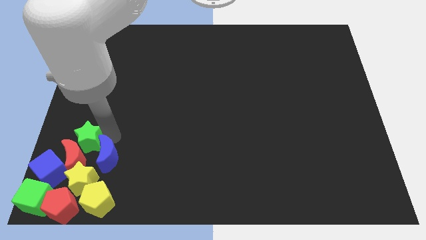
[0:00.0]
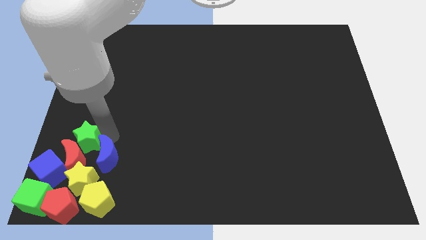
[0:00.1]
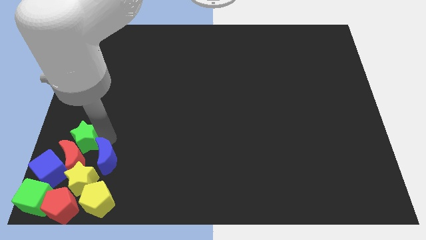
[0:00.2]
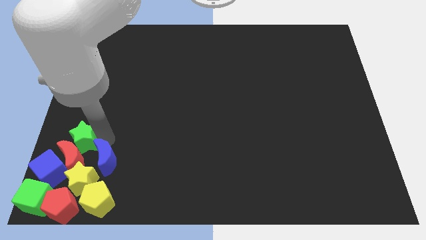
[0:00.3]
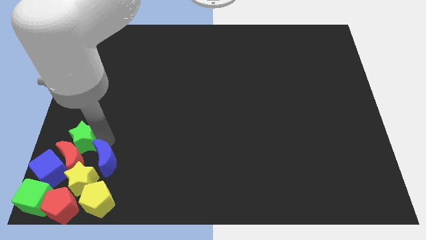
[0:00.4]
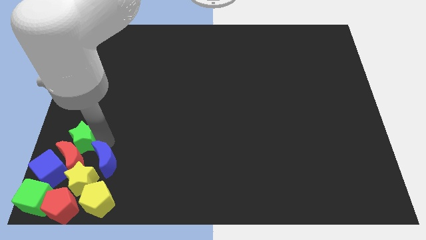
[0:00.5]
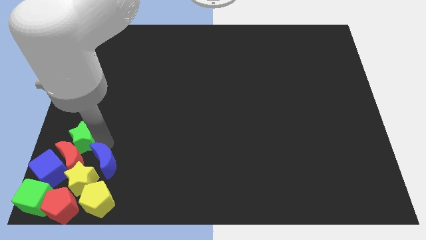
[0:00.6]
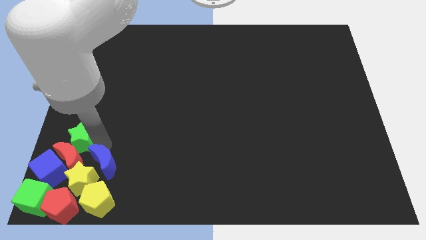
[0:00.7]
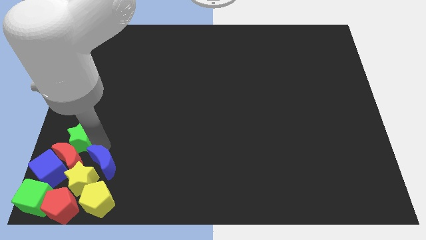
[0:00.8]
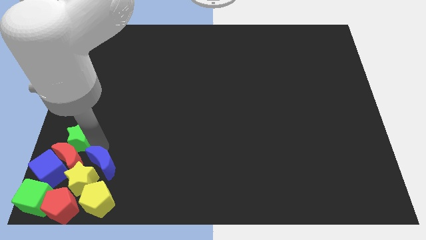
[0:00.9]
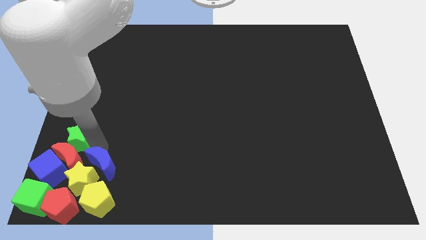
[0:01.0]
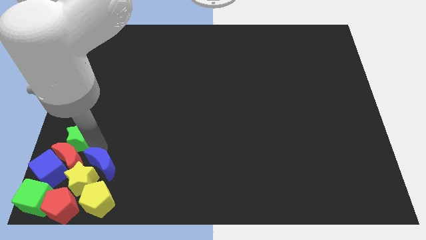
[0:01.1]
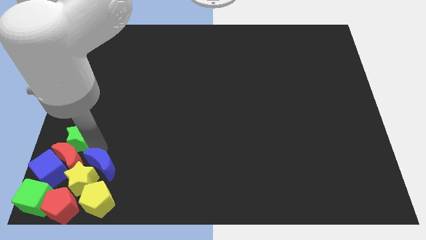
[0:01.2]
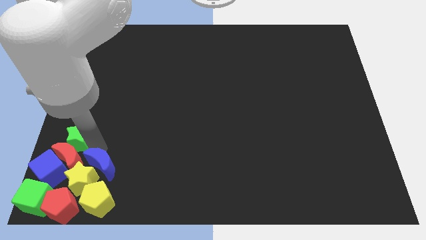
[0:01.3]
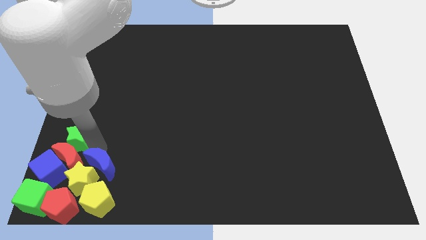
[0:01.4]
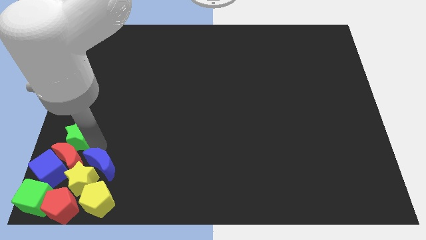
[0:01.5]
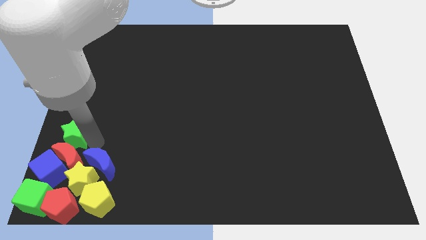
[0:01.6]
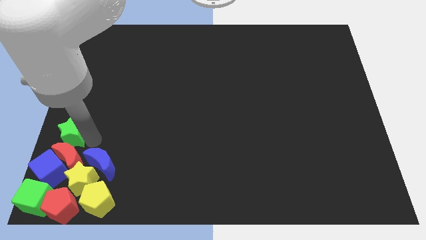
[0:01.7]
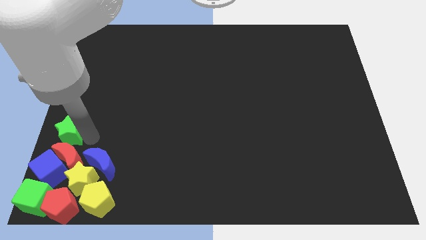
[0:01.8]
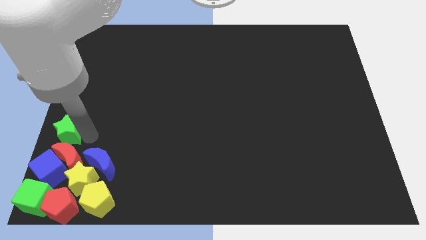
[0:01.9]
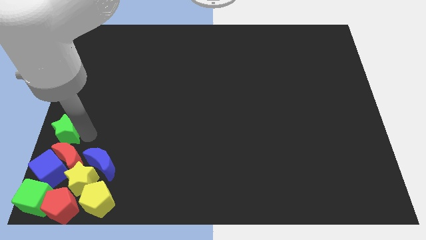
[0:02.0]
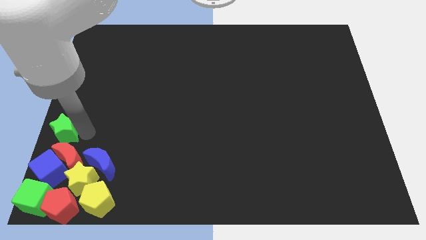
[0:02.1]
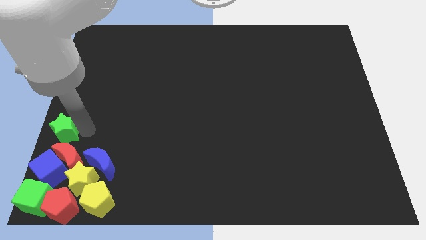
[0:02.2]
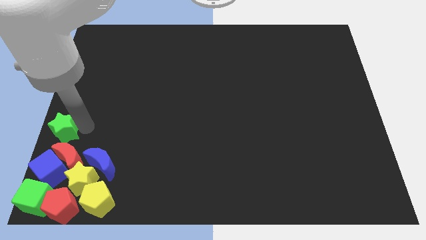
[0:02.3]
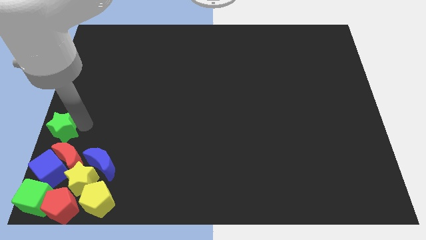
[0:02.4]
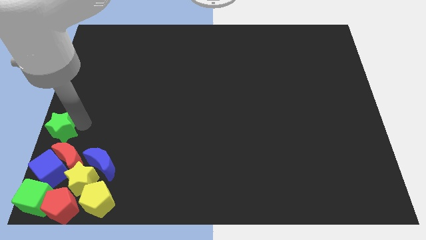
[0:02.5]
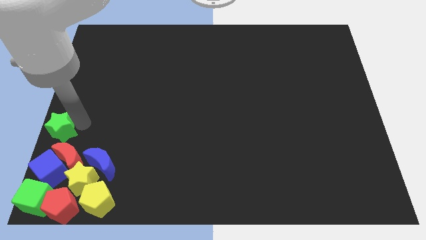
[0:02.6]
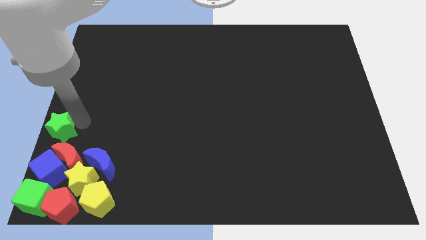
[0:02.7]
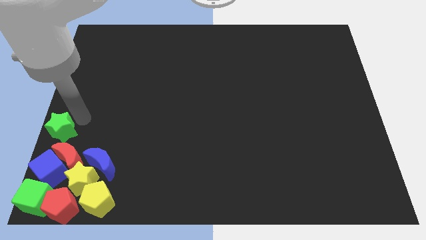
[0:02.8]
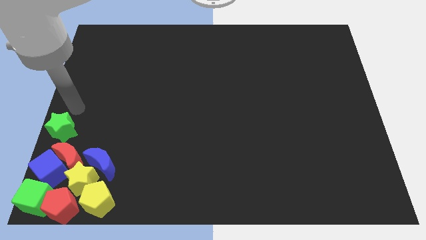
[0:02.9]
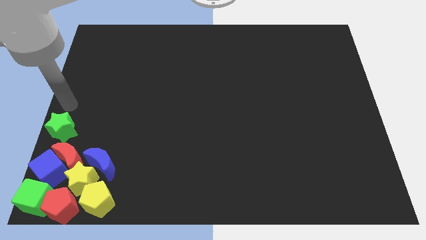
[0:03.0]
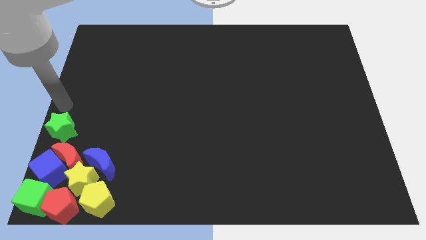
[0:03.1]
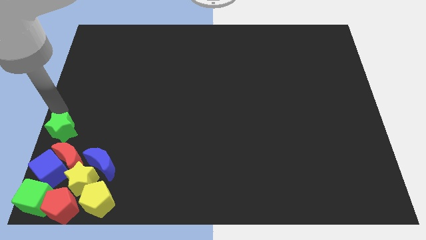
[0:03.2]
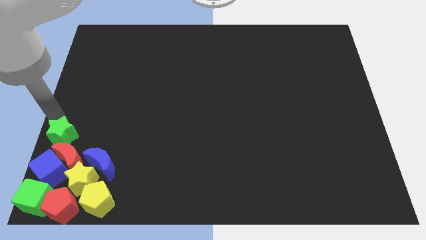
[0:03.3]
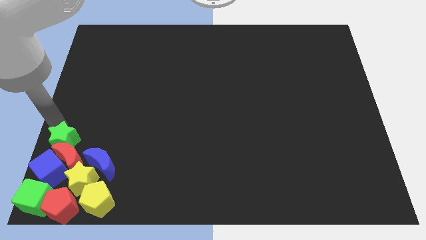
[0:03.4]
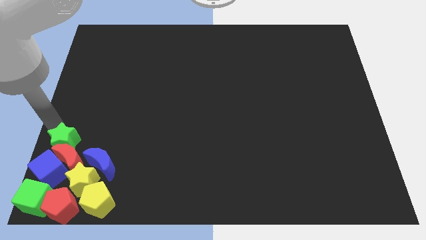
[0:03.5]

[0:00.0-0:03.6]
separate the green star from the blue moon

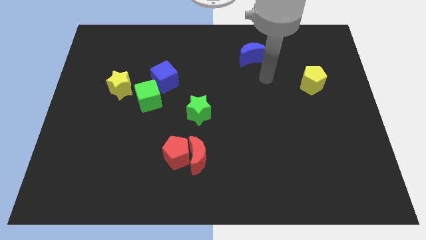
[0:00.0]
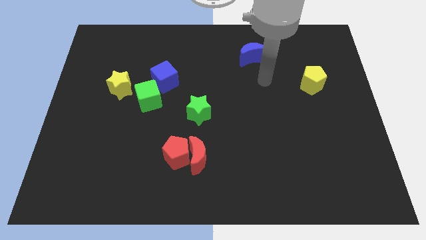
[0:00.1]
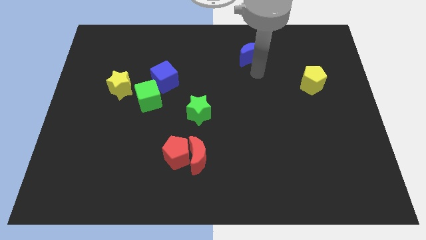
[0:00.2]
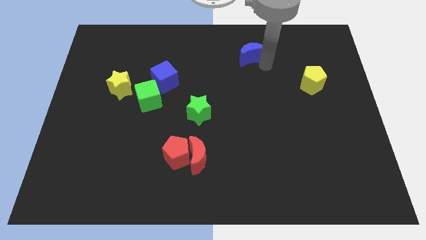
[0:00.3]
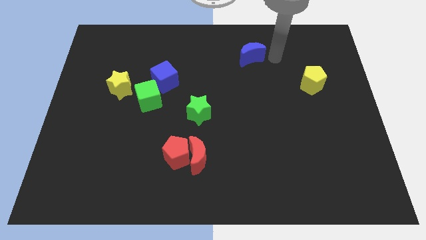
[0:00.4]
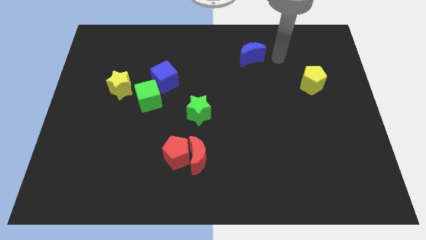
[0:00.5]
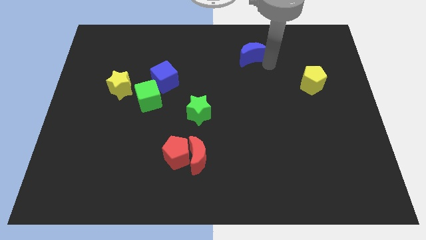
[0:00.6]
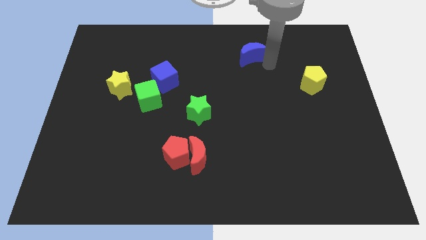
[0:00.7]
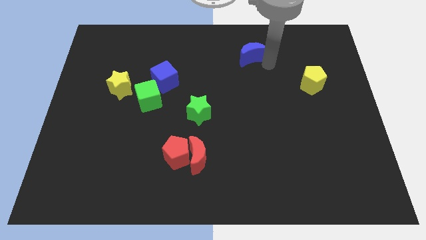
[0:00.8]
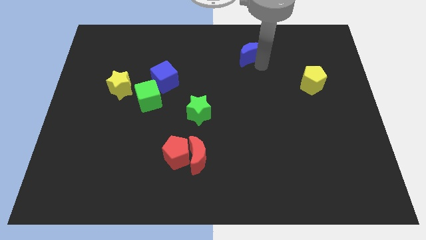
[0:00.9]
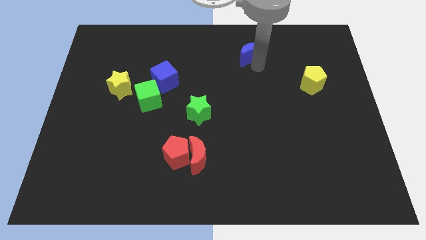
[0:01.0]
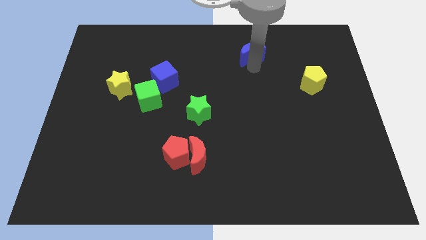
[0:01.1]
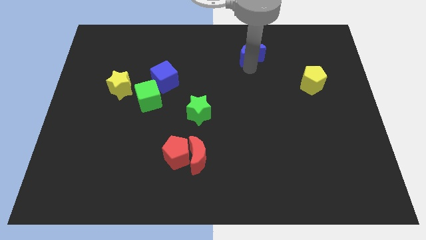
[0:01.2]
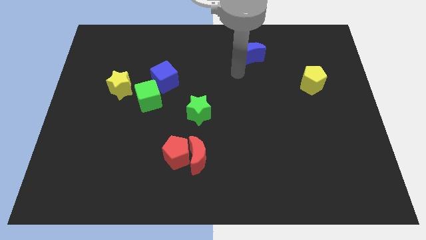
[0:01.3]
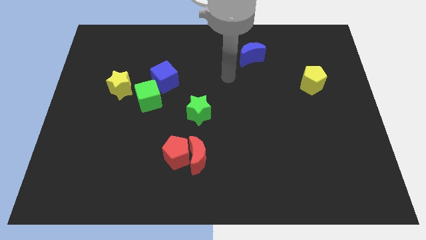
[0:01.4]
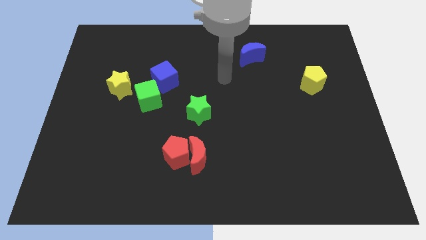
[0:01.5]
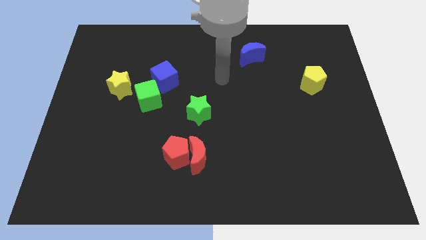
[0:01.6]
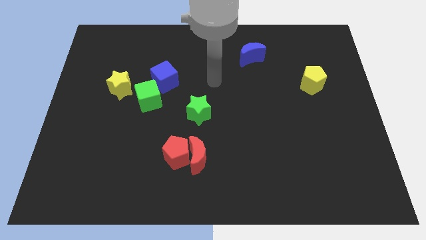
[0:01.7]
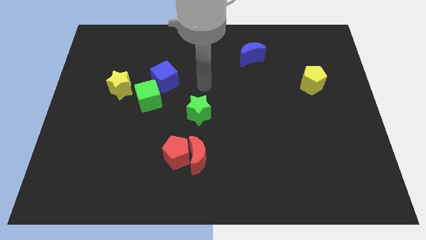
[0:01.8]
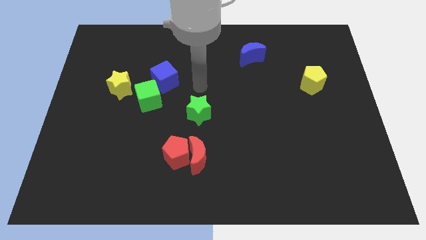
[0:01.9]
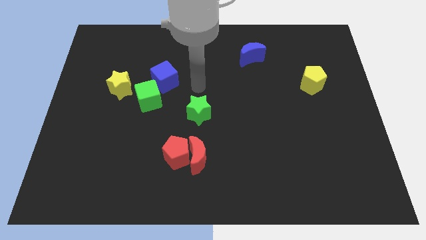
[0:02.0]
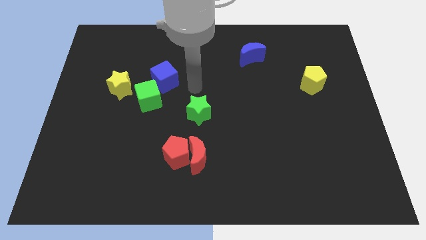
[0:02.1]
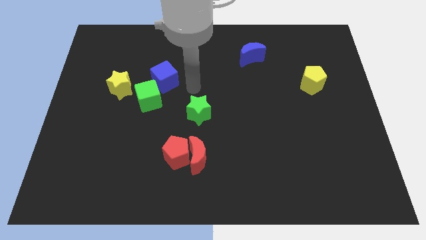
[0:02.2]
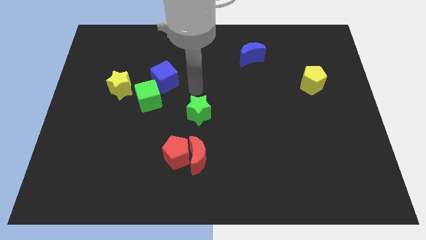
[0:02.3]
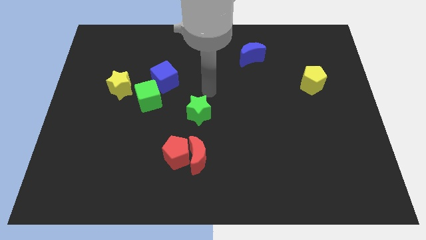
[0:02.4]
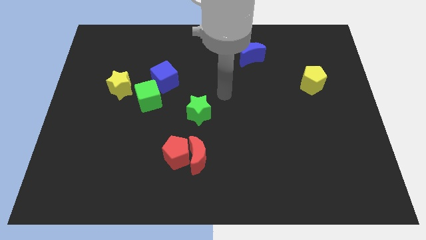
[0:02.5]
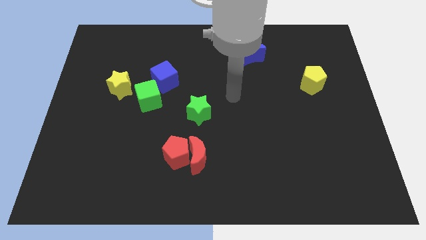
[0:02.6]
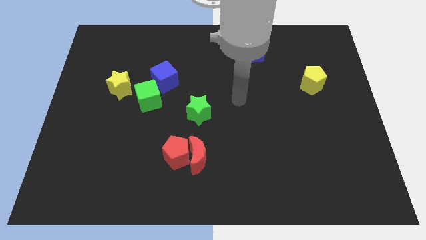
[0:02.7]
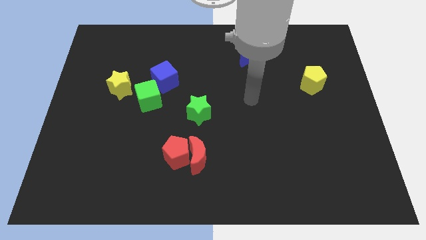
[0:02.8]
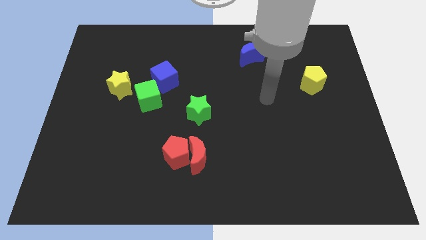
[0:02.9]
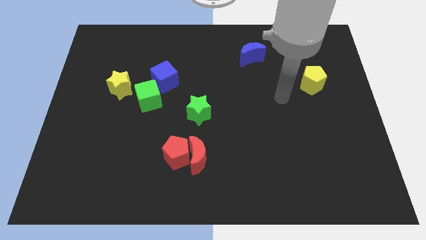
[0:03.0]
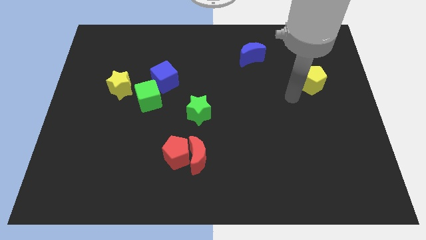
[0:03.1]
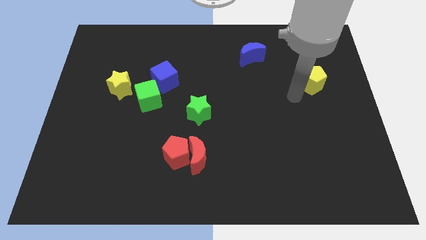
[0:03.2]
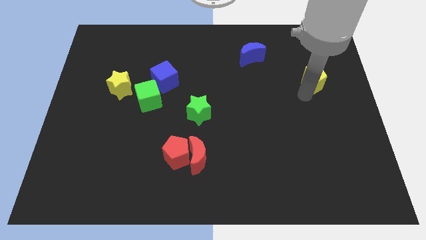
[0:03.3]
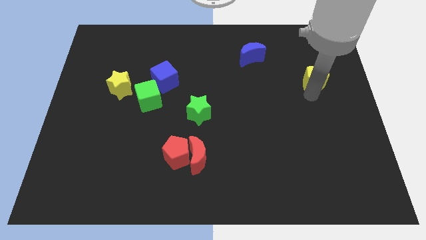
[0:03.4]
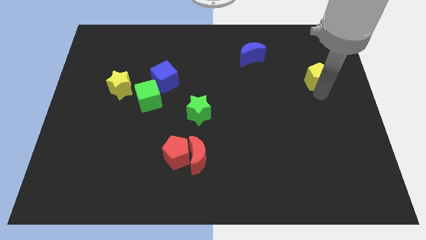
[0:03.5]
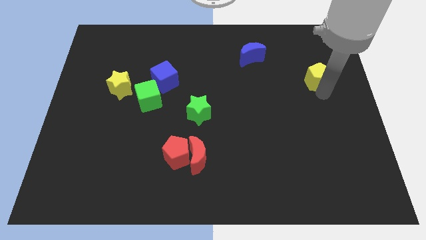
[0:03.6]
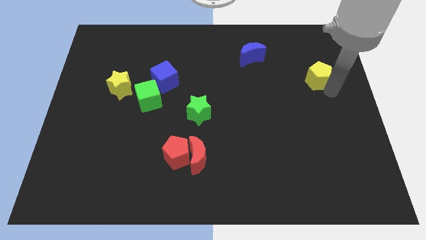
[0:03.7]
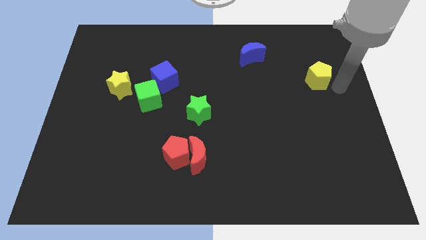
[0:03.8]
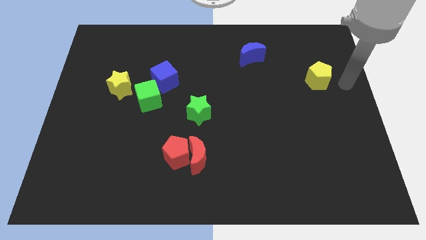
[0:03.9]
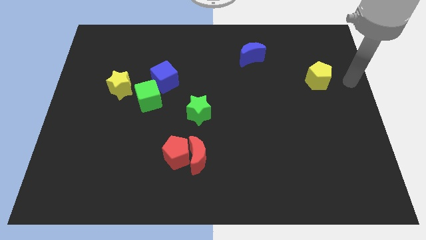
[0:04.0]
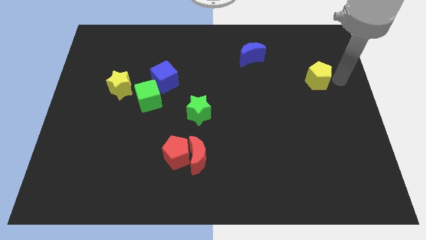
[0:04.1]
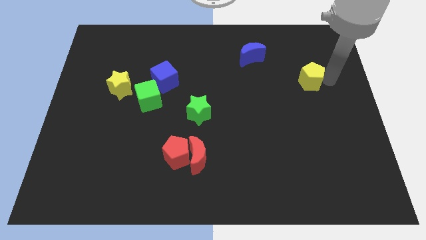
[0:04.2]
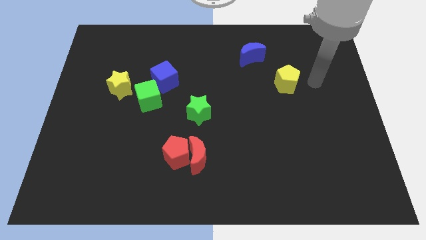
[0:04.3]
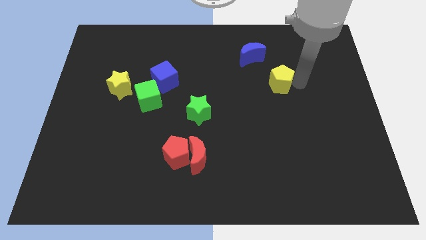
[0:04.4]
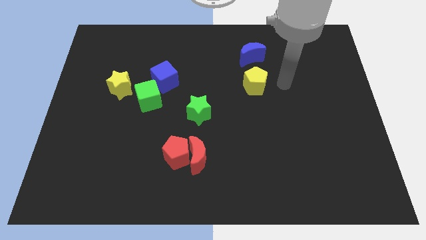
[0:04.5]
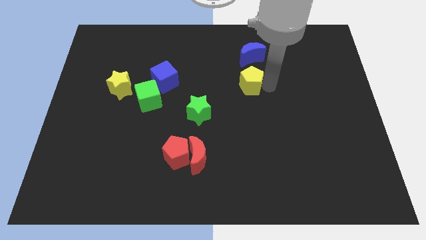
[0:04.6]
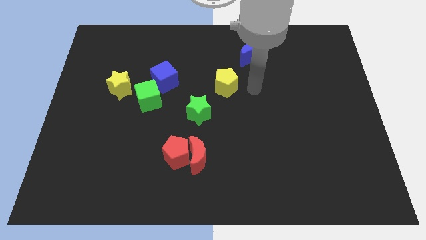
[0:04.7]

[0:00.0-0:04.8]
place the yellow pentagon at the top right side of green star

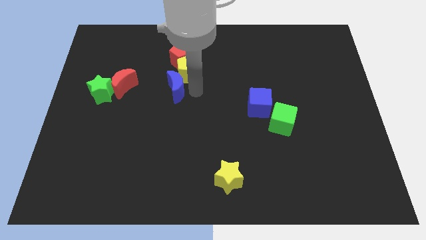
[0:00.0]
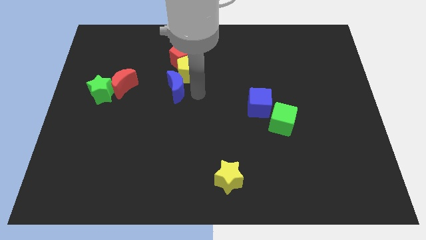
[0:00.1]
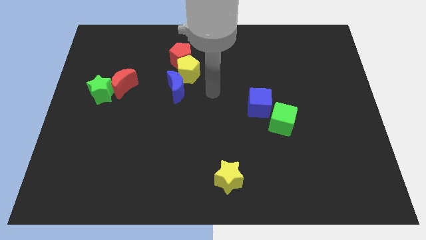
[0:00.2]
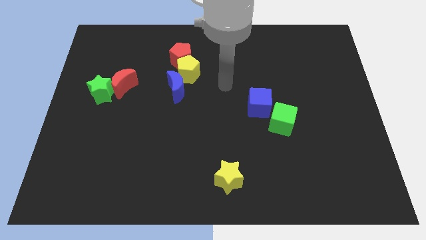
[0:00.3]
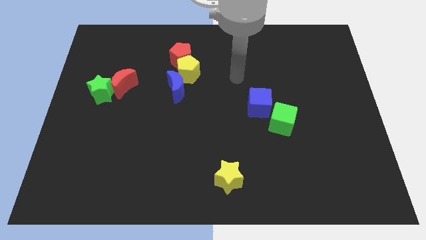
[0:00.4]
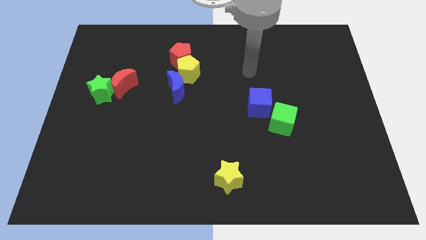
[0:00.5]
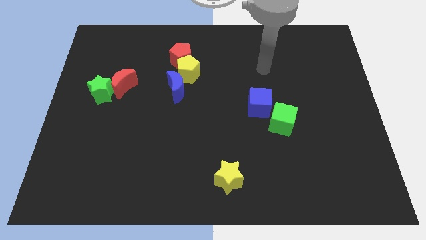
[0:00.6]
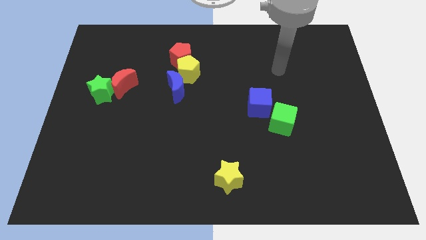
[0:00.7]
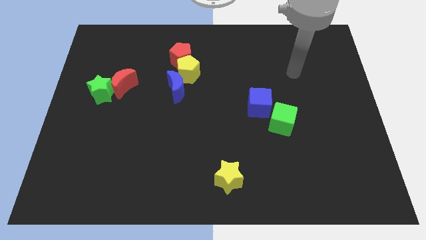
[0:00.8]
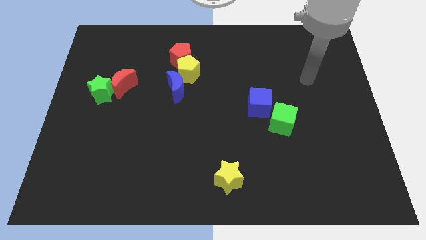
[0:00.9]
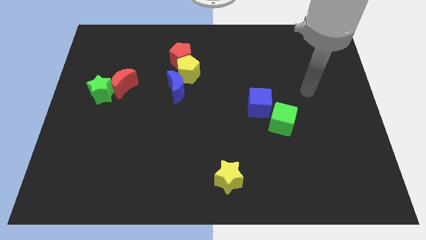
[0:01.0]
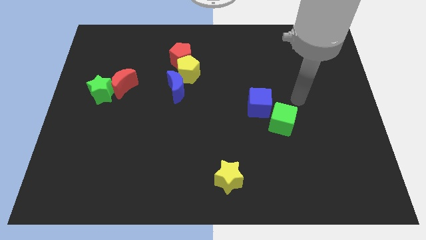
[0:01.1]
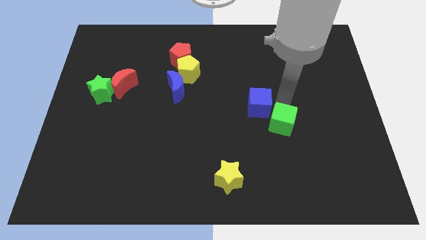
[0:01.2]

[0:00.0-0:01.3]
point your arm at the top of the green cube
